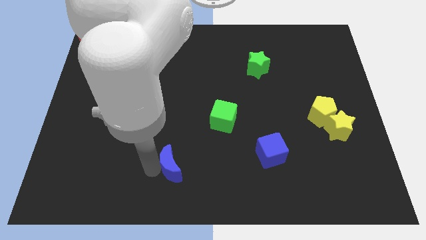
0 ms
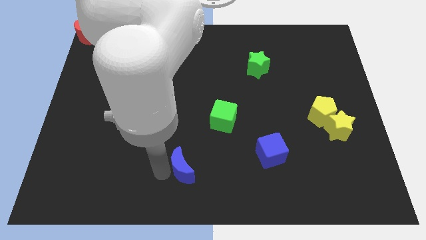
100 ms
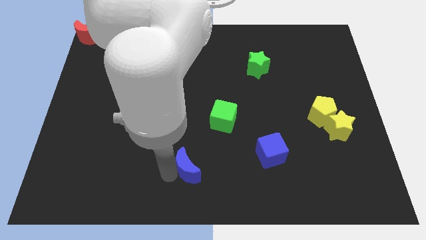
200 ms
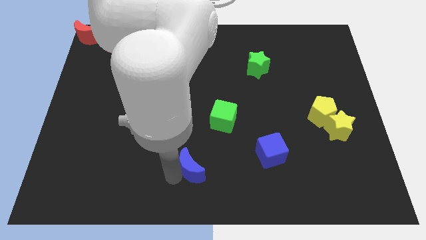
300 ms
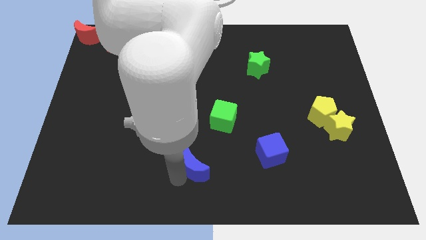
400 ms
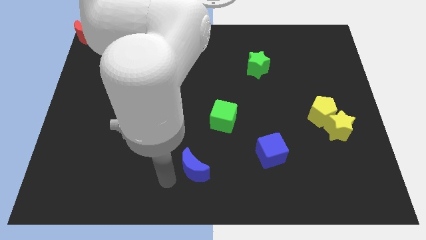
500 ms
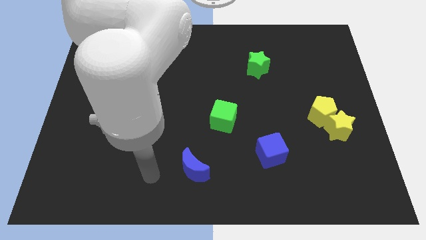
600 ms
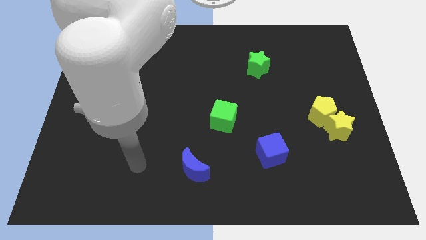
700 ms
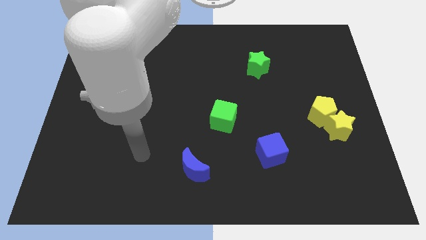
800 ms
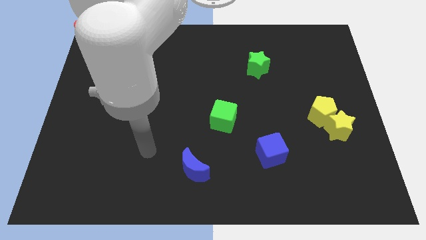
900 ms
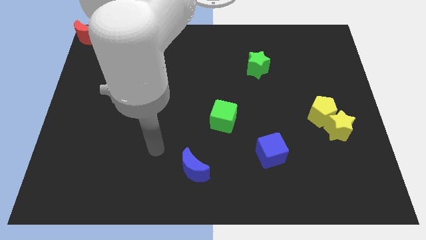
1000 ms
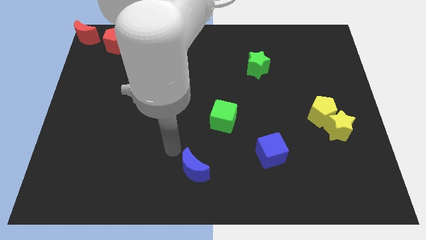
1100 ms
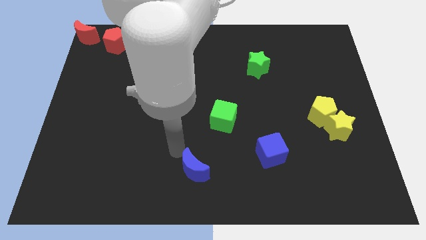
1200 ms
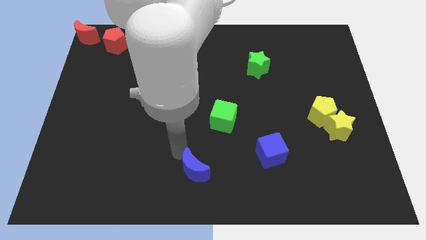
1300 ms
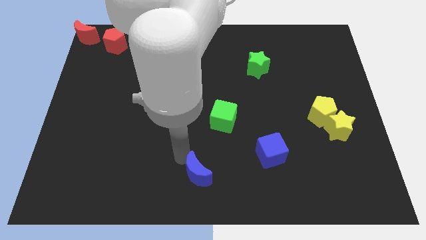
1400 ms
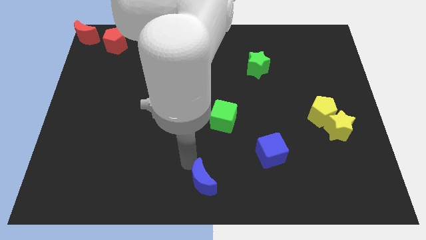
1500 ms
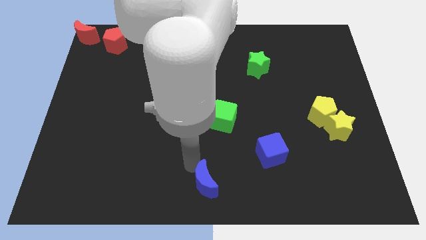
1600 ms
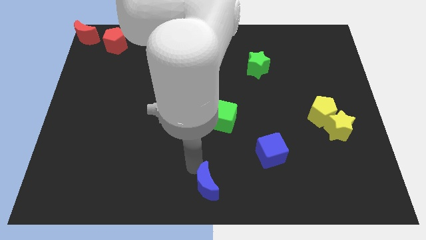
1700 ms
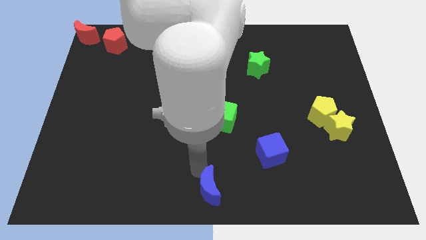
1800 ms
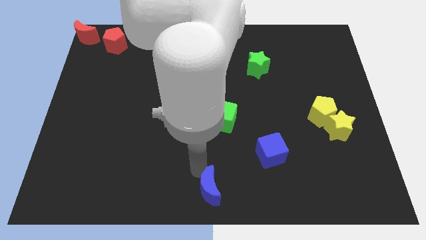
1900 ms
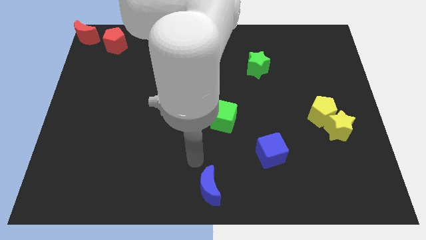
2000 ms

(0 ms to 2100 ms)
push the blue semi circle below the green cube

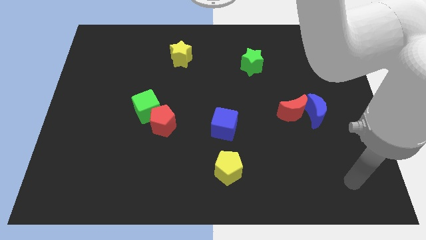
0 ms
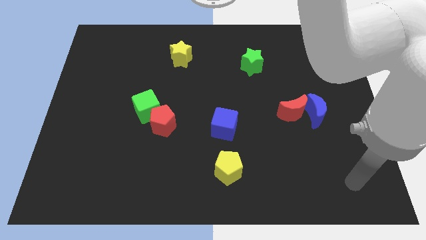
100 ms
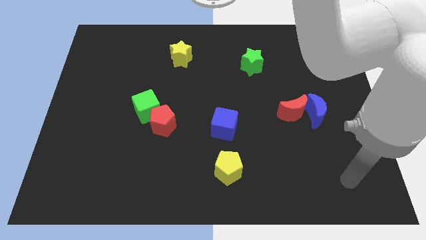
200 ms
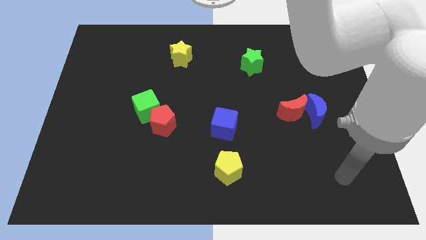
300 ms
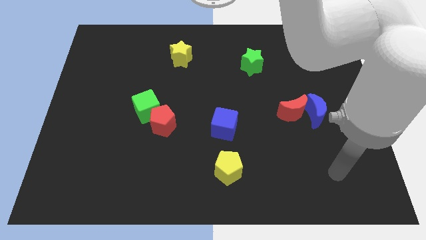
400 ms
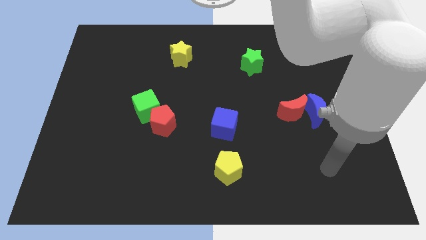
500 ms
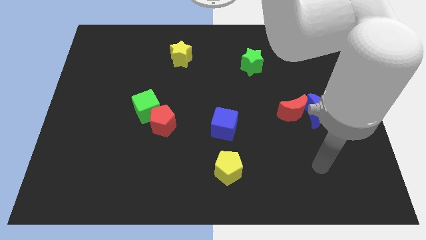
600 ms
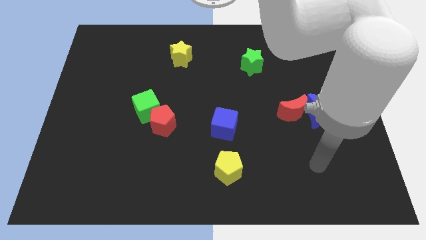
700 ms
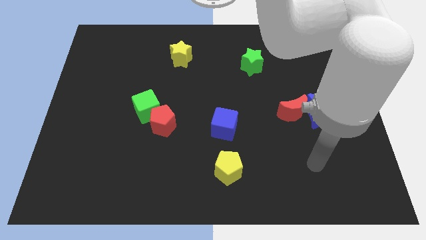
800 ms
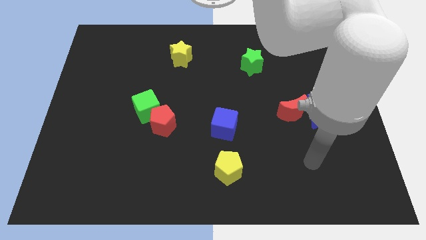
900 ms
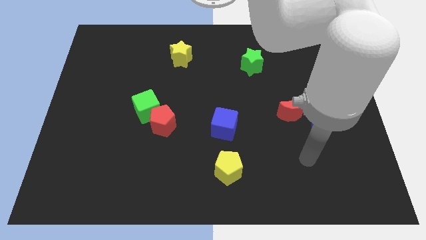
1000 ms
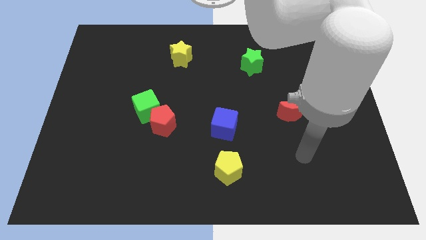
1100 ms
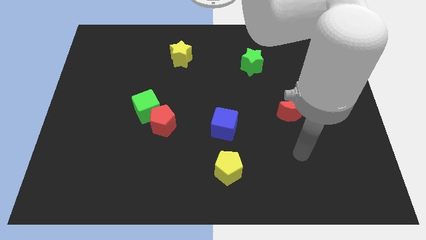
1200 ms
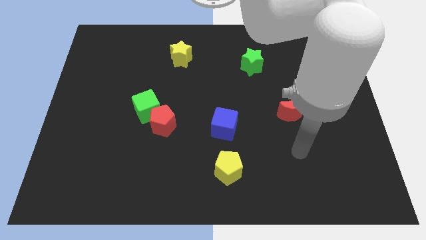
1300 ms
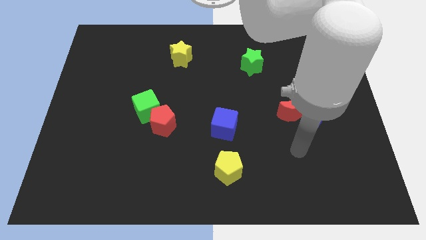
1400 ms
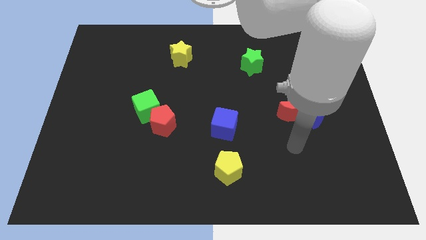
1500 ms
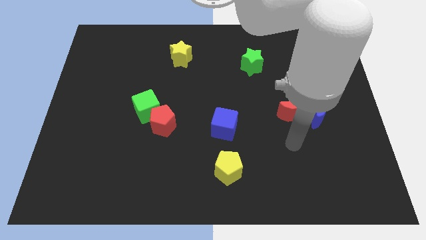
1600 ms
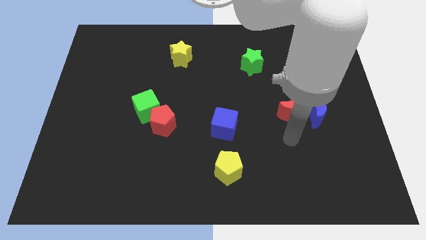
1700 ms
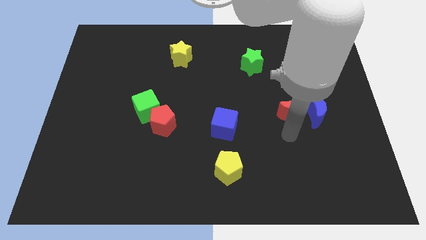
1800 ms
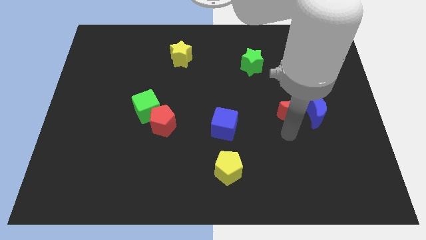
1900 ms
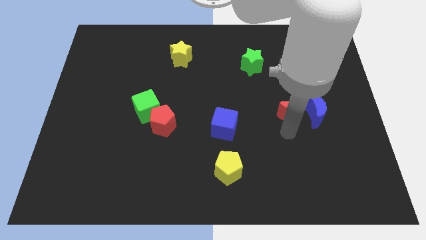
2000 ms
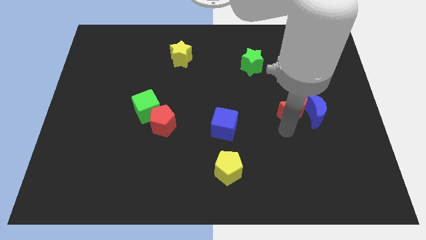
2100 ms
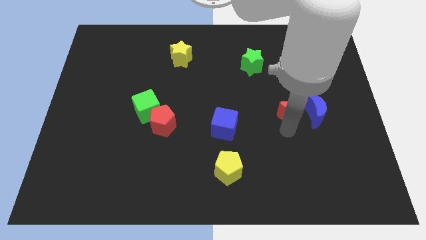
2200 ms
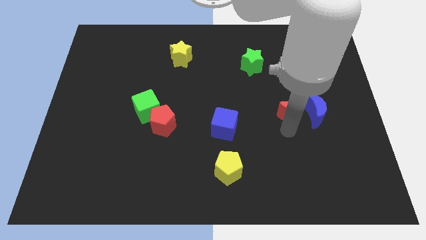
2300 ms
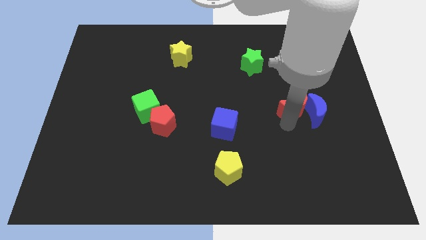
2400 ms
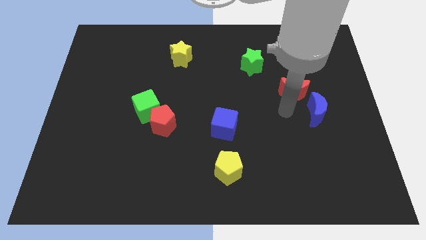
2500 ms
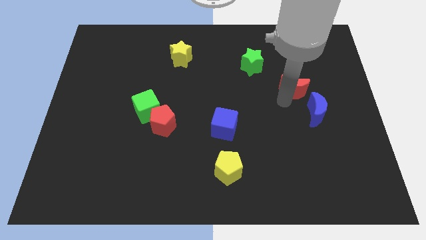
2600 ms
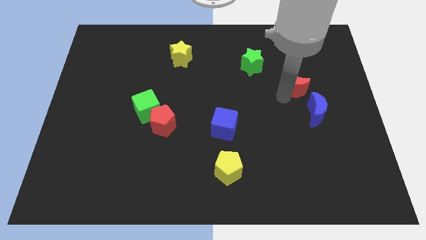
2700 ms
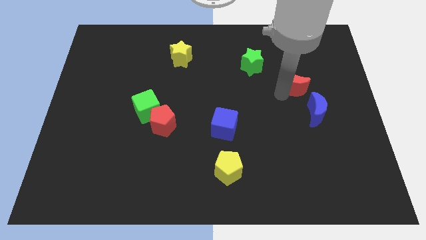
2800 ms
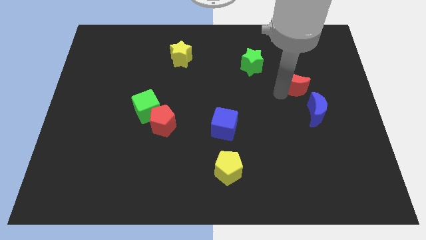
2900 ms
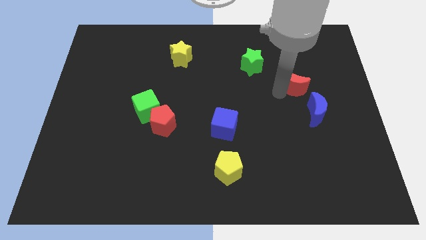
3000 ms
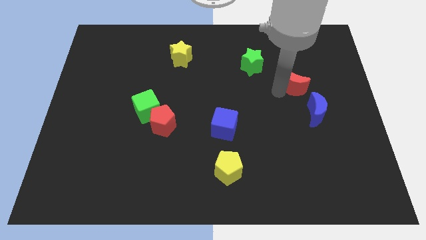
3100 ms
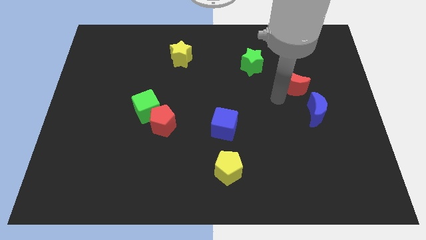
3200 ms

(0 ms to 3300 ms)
move the red crescent up slightly

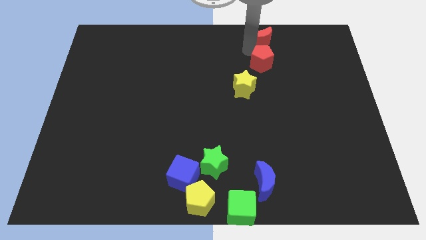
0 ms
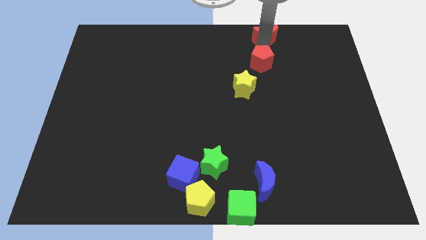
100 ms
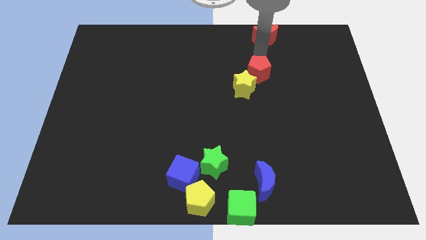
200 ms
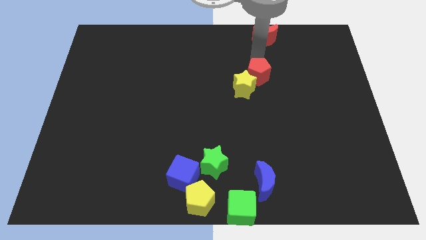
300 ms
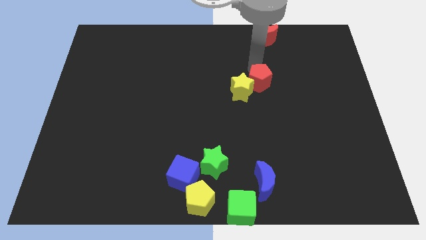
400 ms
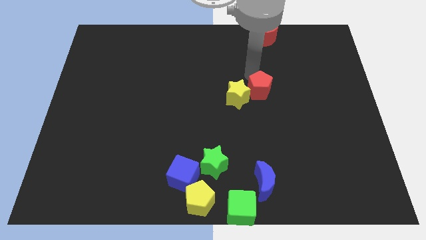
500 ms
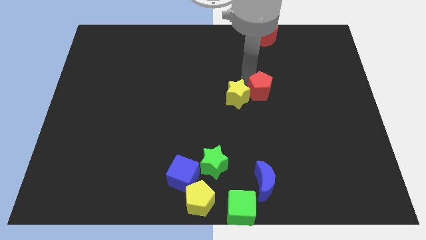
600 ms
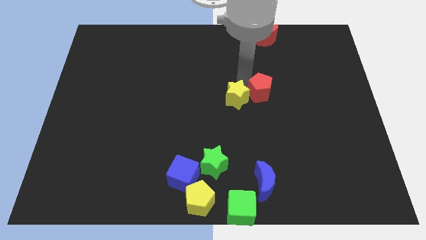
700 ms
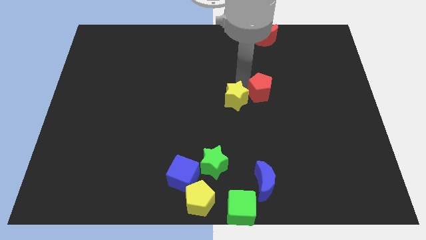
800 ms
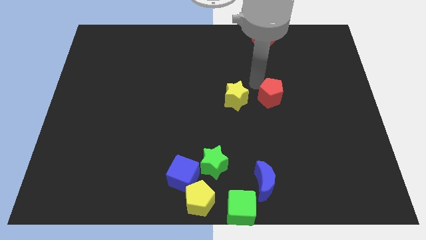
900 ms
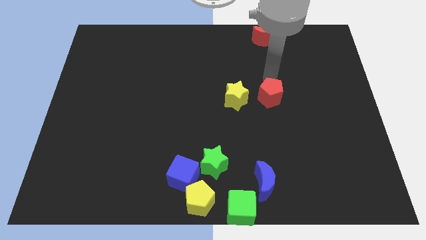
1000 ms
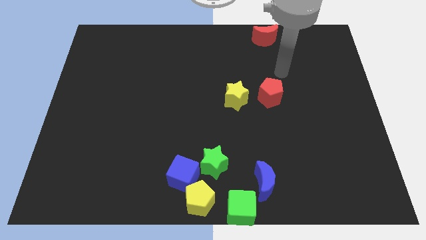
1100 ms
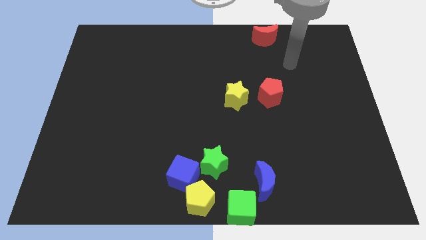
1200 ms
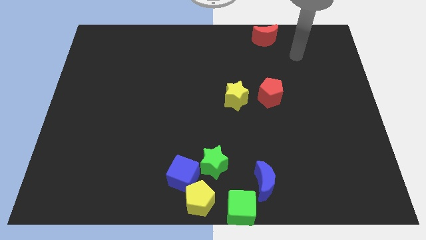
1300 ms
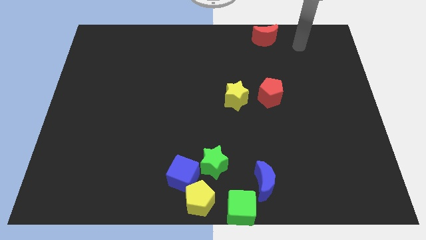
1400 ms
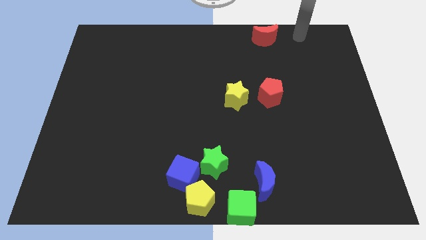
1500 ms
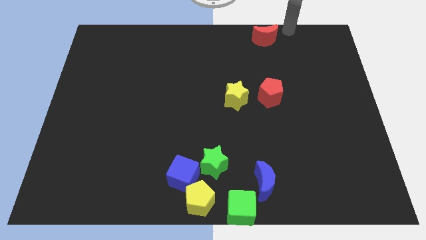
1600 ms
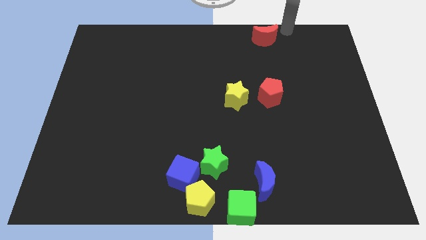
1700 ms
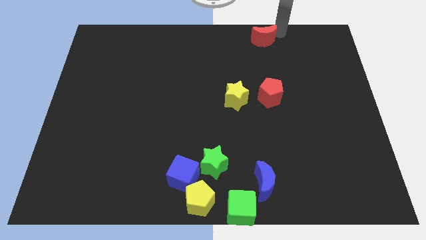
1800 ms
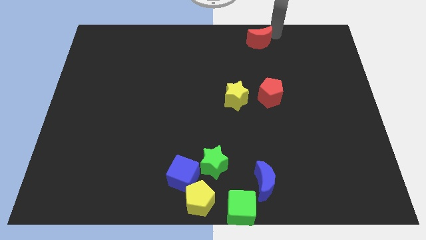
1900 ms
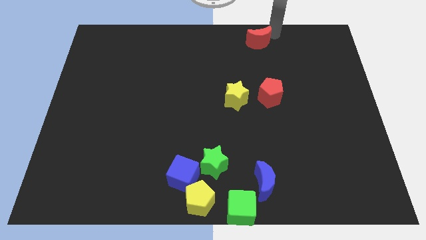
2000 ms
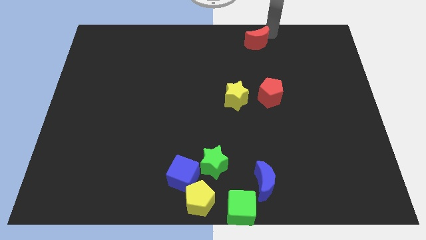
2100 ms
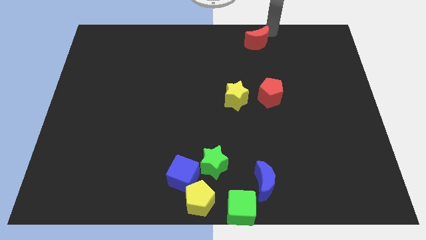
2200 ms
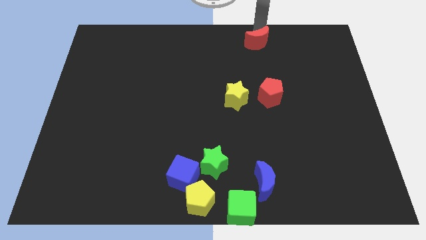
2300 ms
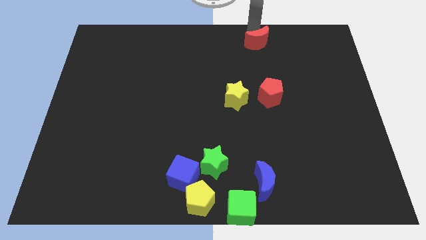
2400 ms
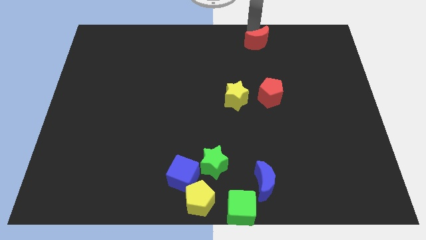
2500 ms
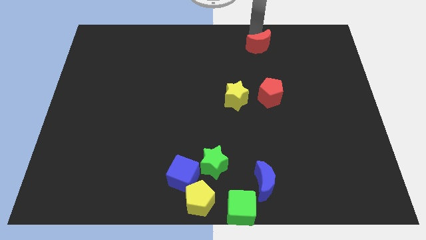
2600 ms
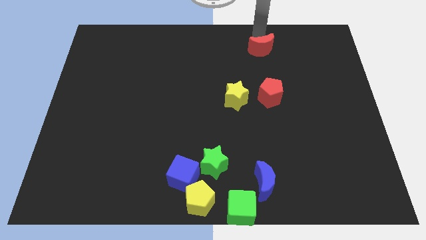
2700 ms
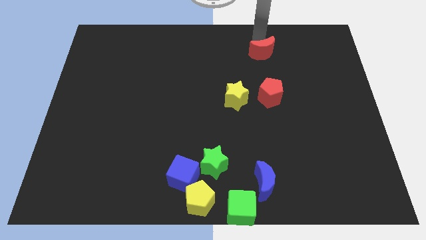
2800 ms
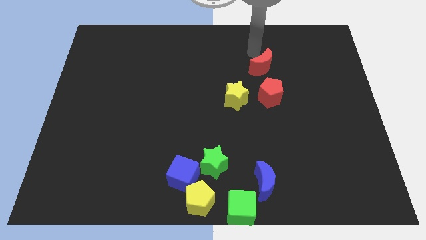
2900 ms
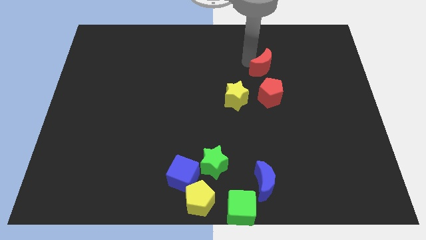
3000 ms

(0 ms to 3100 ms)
separate the red pentagon from the red moon

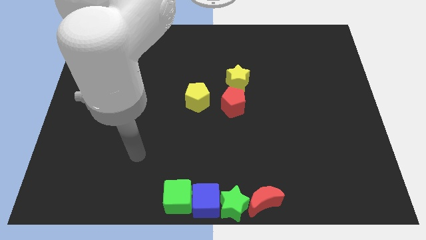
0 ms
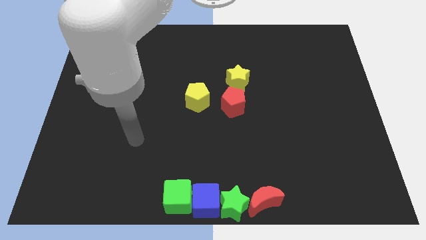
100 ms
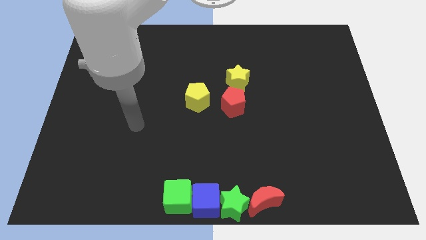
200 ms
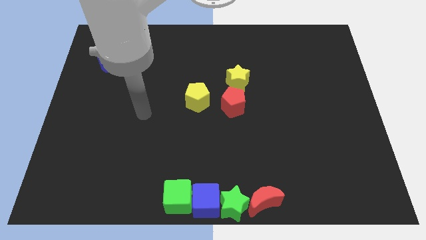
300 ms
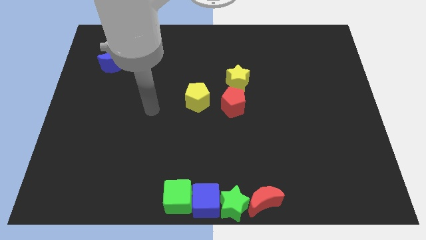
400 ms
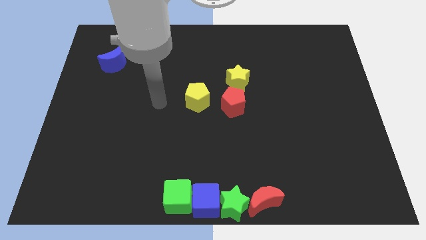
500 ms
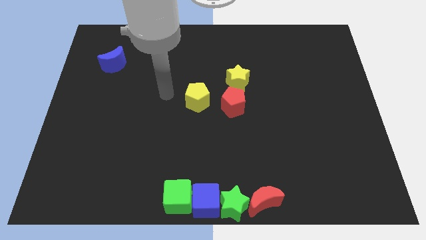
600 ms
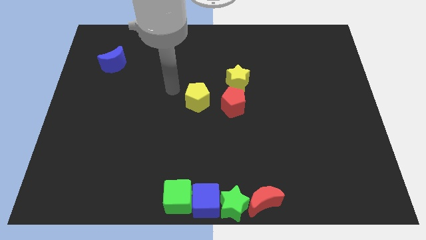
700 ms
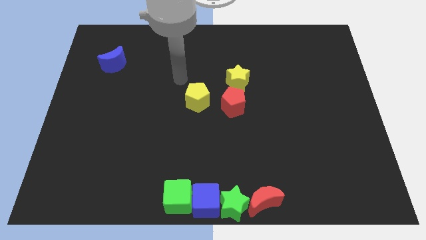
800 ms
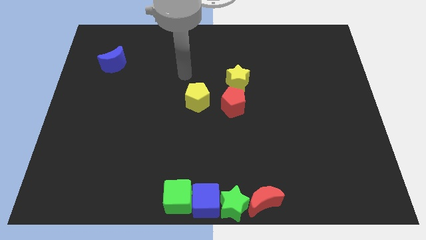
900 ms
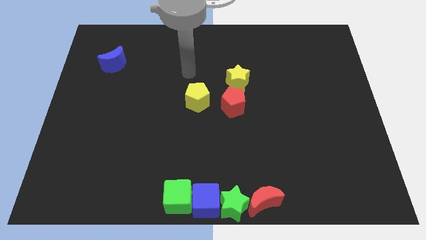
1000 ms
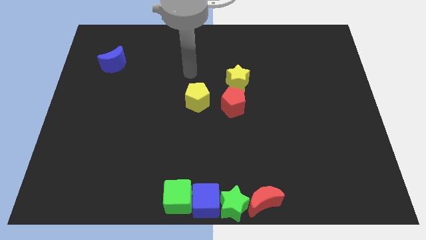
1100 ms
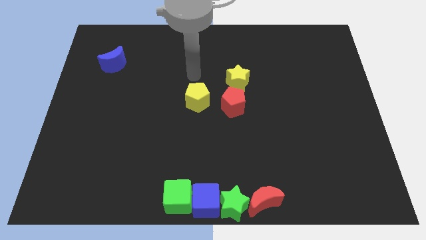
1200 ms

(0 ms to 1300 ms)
point the arm to the top side of the yellow pentagon
